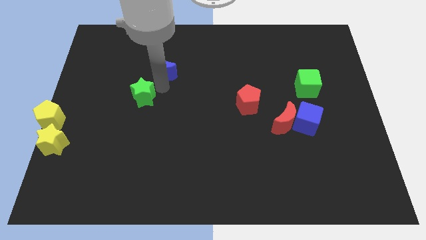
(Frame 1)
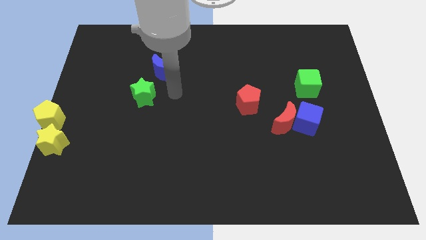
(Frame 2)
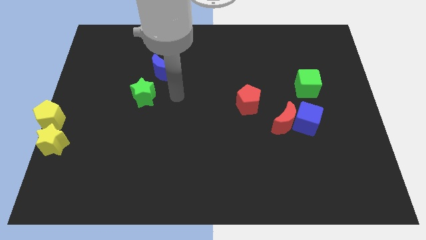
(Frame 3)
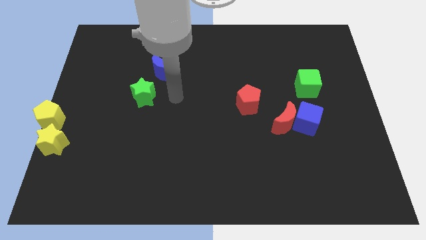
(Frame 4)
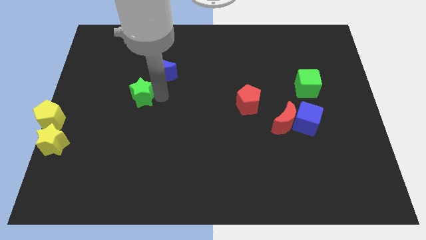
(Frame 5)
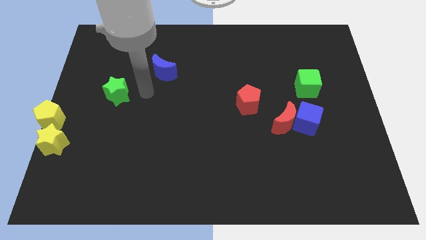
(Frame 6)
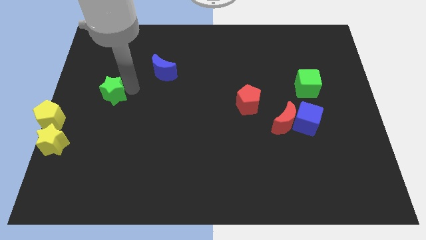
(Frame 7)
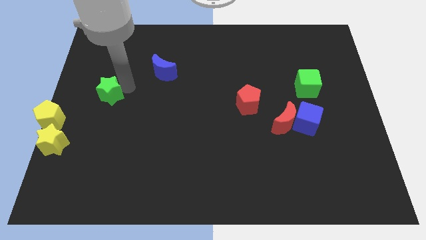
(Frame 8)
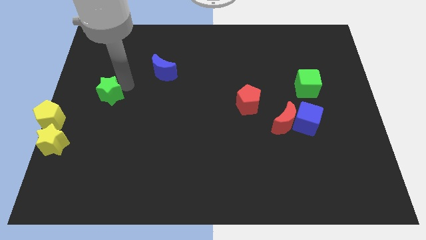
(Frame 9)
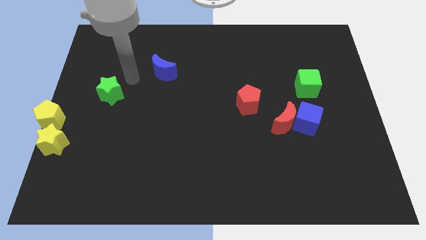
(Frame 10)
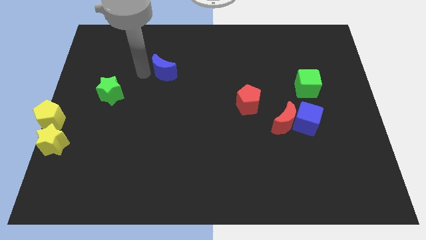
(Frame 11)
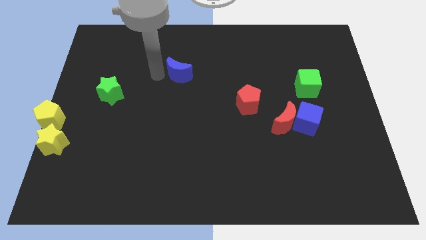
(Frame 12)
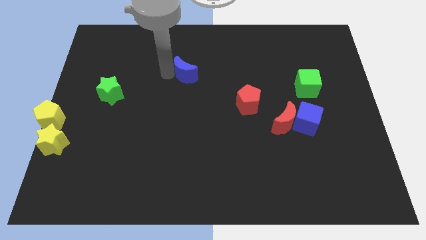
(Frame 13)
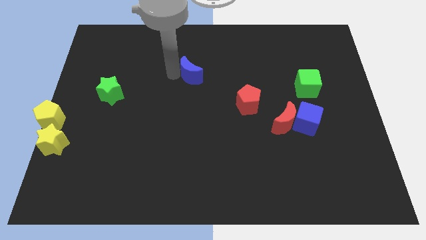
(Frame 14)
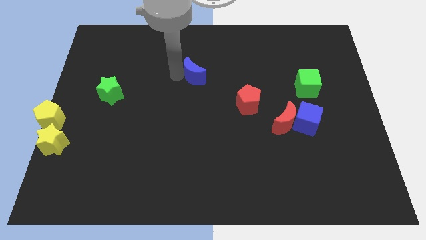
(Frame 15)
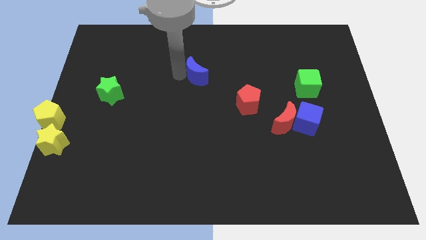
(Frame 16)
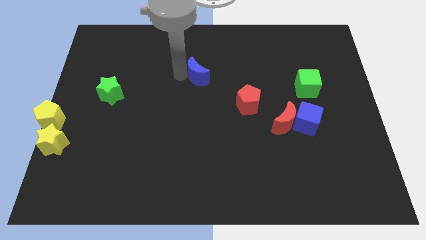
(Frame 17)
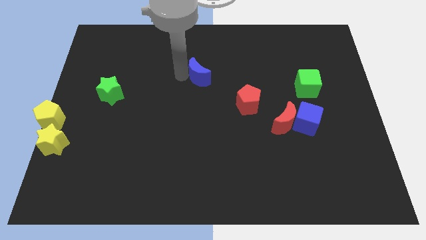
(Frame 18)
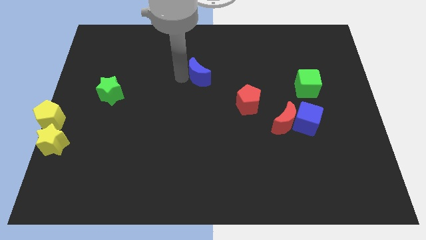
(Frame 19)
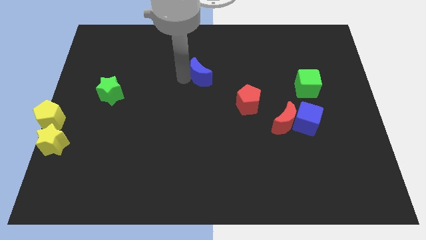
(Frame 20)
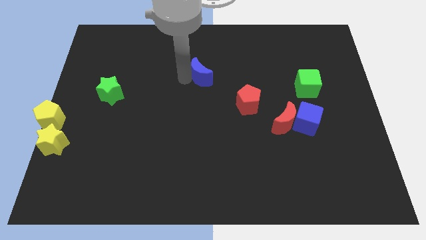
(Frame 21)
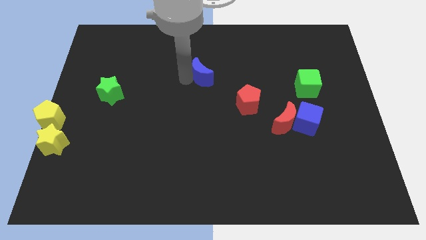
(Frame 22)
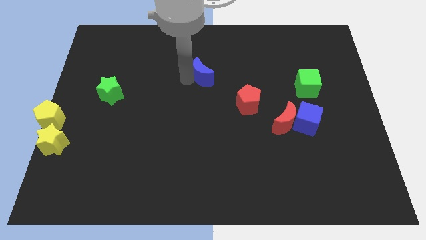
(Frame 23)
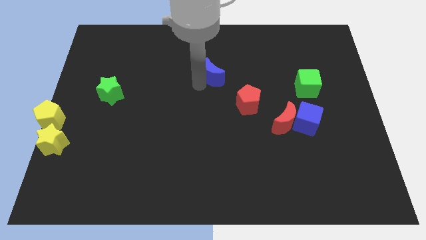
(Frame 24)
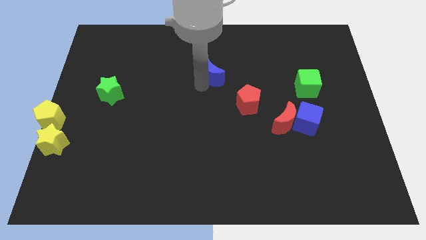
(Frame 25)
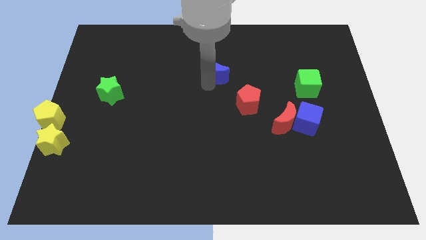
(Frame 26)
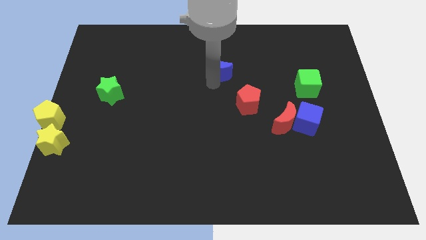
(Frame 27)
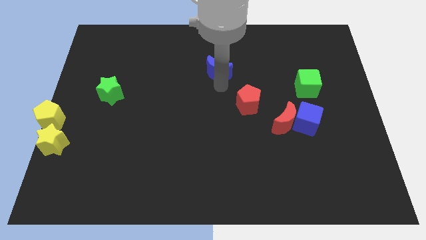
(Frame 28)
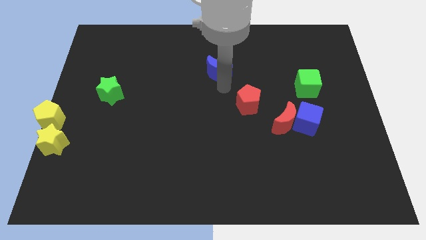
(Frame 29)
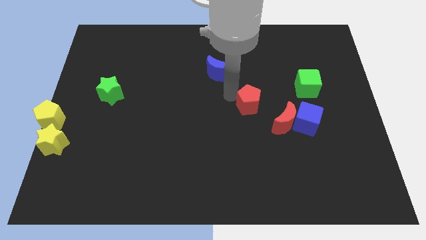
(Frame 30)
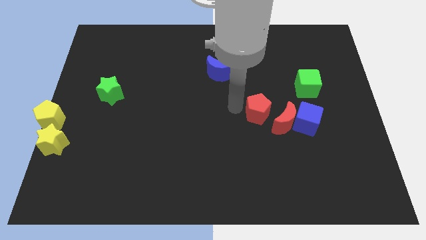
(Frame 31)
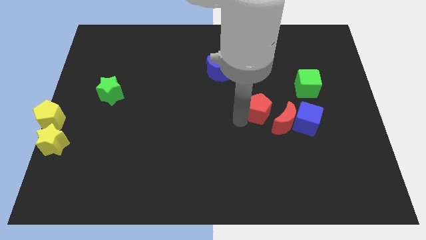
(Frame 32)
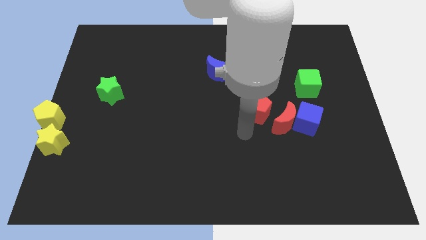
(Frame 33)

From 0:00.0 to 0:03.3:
slightly move the blue crescent right side of the board

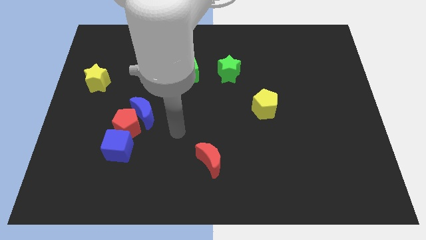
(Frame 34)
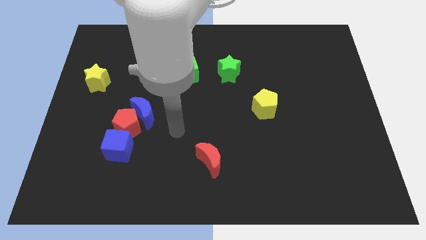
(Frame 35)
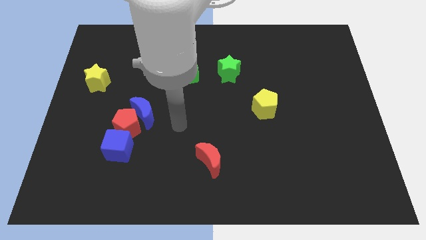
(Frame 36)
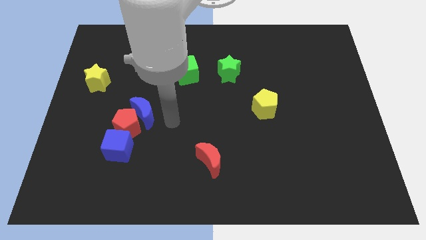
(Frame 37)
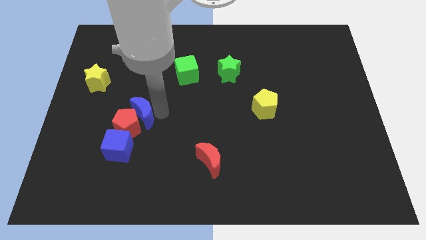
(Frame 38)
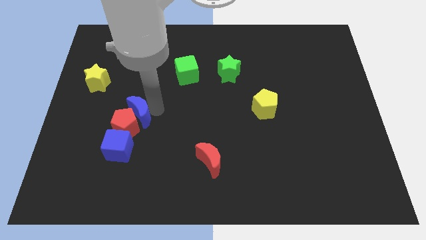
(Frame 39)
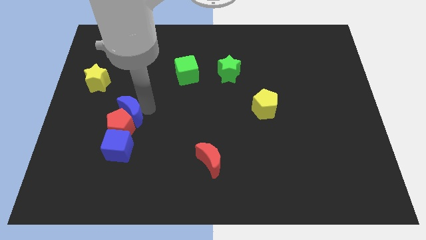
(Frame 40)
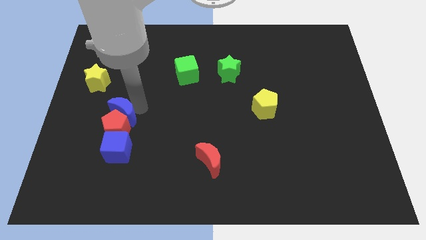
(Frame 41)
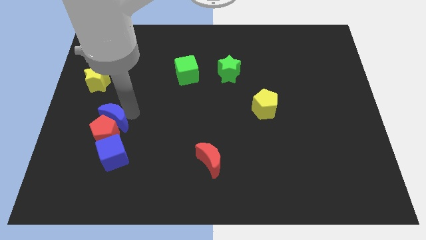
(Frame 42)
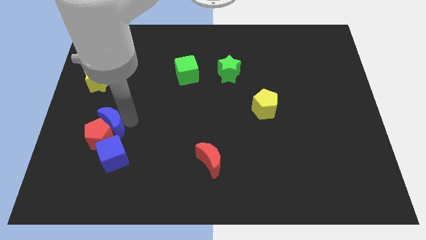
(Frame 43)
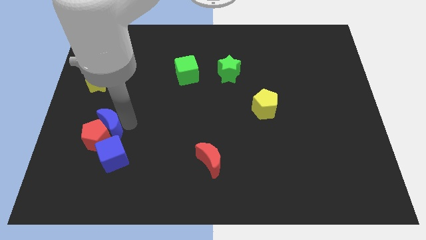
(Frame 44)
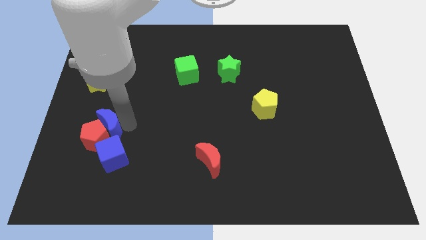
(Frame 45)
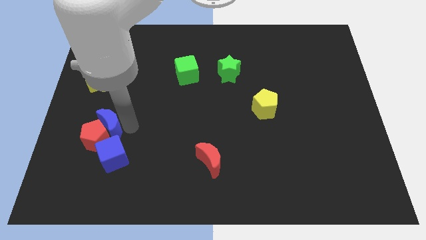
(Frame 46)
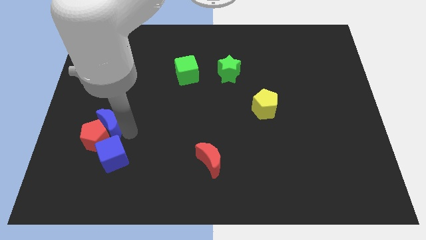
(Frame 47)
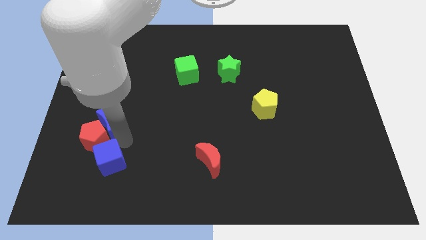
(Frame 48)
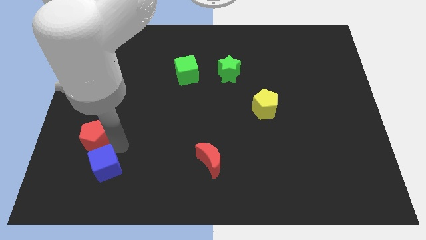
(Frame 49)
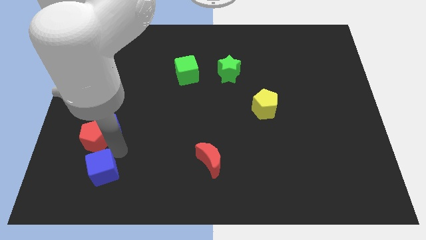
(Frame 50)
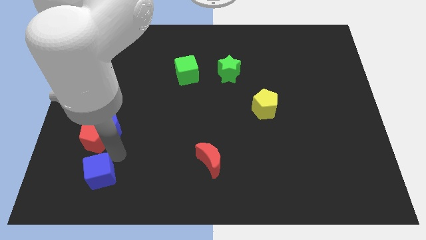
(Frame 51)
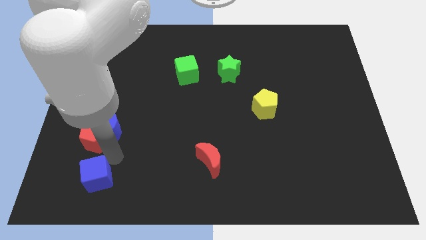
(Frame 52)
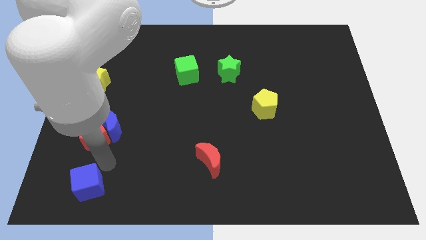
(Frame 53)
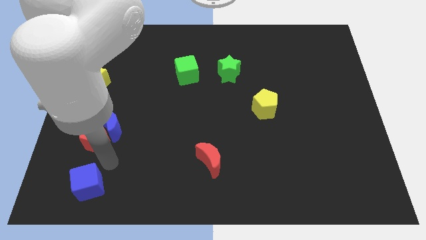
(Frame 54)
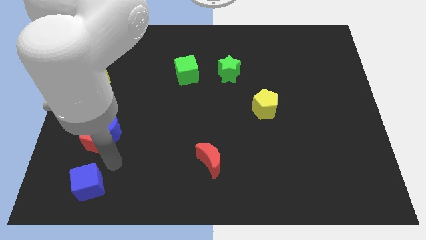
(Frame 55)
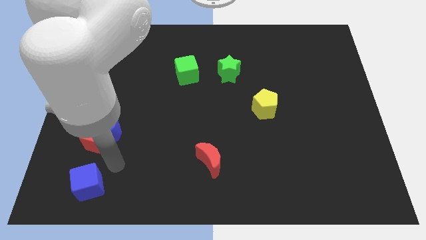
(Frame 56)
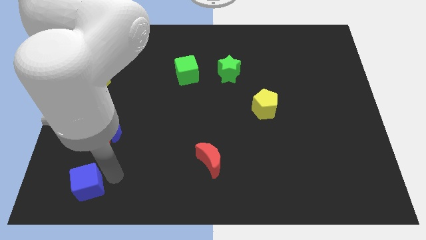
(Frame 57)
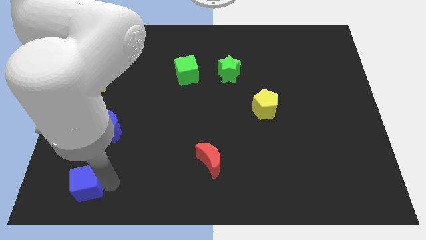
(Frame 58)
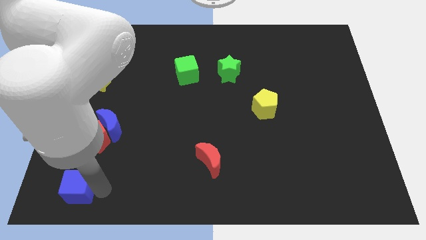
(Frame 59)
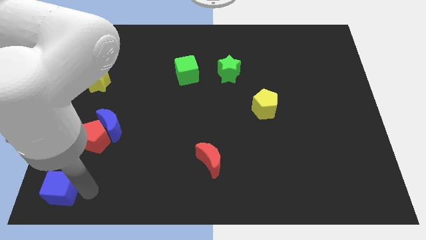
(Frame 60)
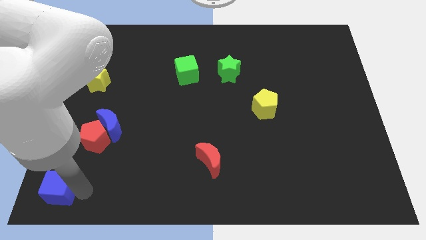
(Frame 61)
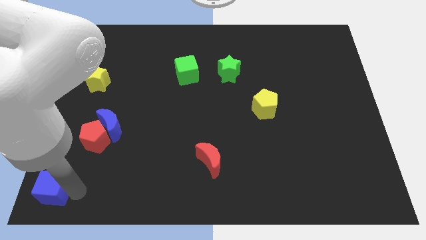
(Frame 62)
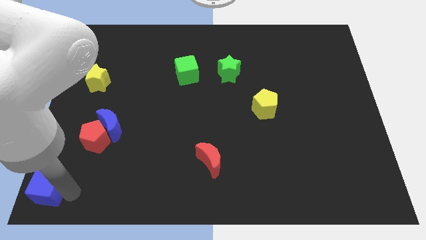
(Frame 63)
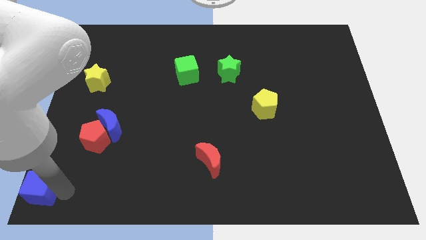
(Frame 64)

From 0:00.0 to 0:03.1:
separate the blue cube from the red pentagon and blue crescent

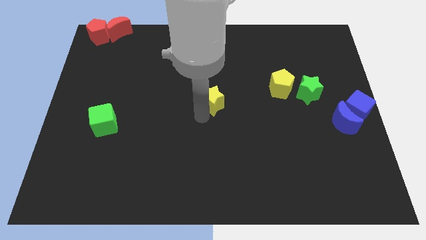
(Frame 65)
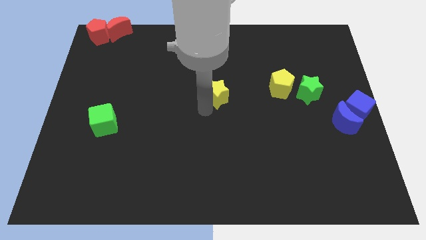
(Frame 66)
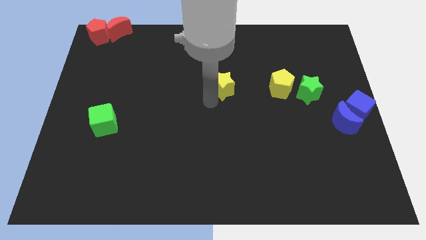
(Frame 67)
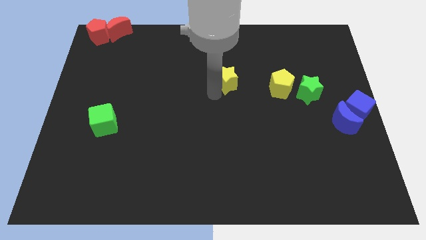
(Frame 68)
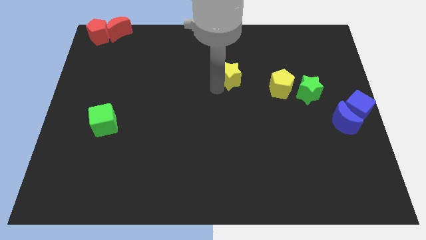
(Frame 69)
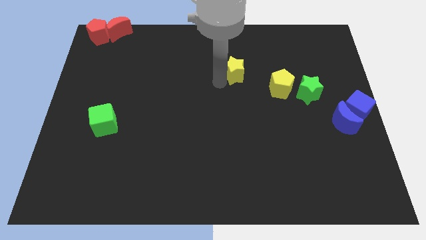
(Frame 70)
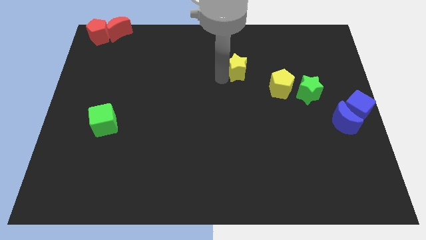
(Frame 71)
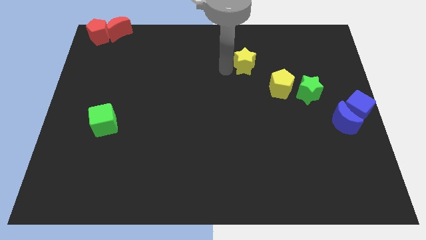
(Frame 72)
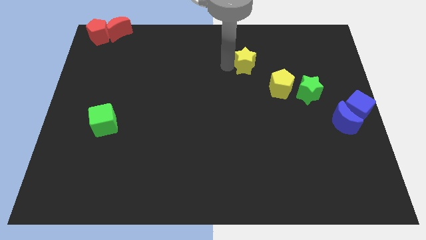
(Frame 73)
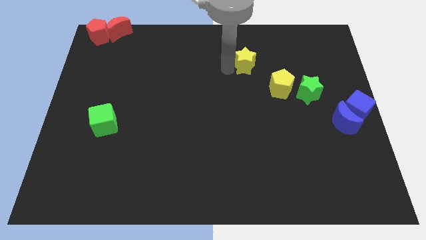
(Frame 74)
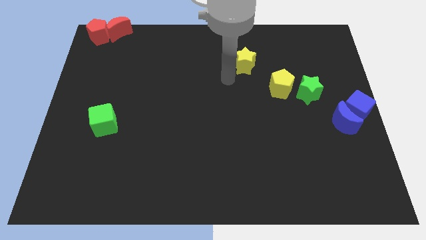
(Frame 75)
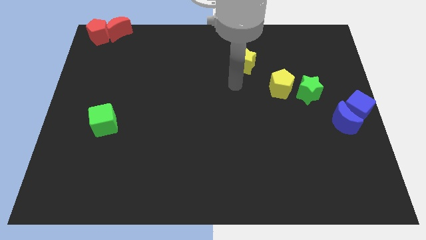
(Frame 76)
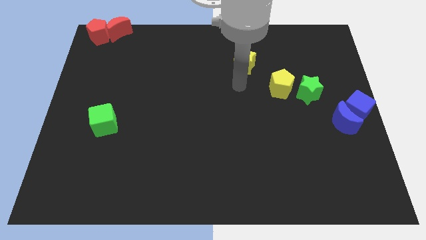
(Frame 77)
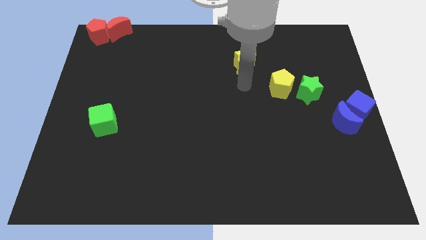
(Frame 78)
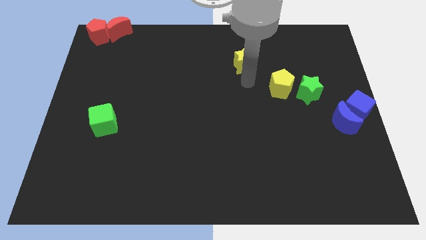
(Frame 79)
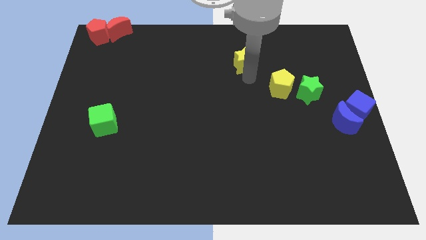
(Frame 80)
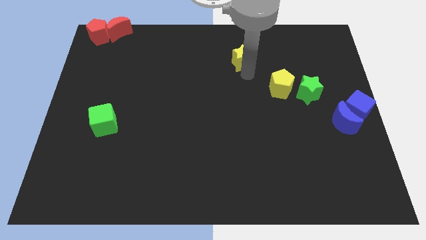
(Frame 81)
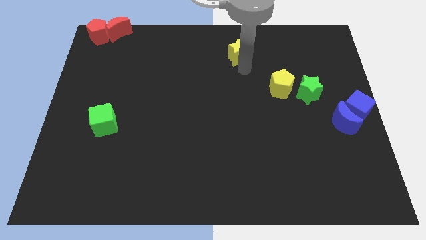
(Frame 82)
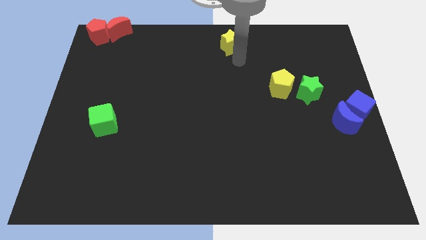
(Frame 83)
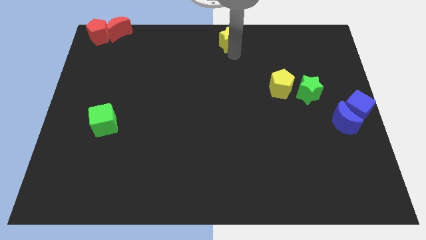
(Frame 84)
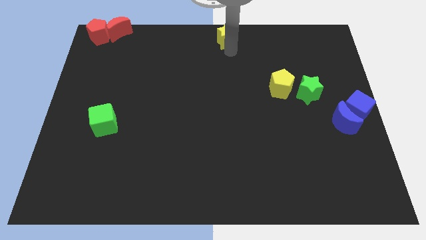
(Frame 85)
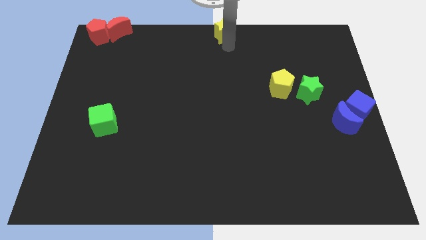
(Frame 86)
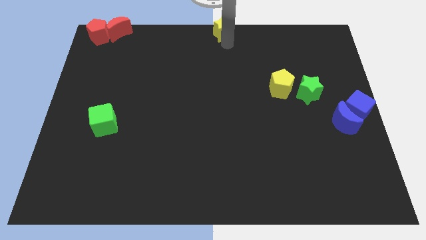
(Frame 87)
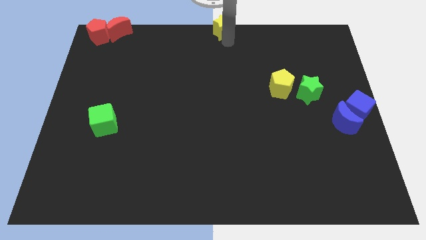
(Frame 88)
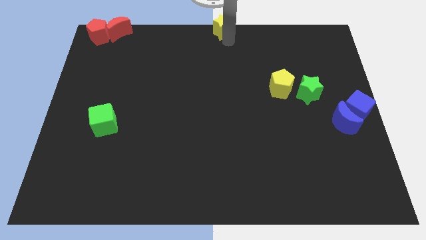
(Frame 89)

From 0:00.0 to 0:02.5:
place yellow star to the top center of the board
